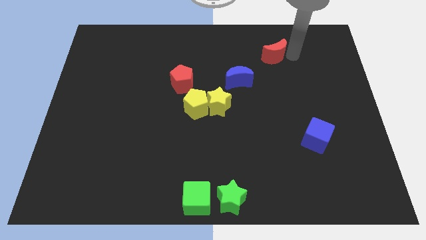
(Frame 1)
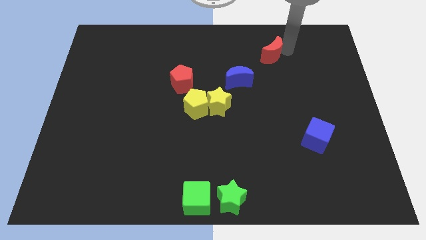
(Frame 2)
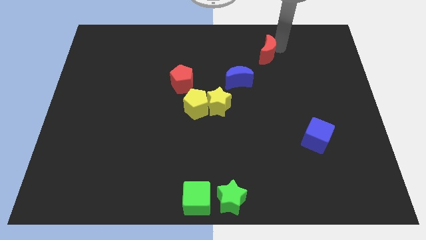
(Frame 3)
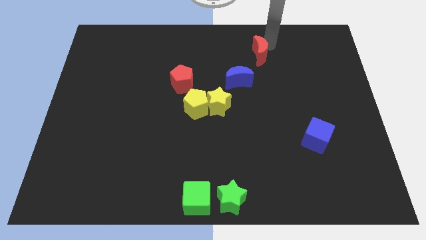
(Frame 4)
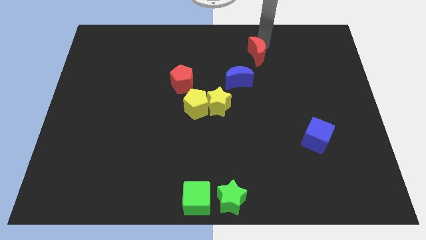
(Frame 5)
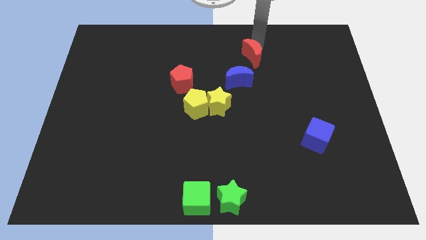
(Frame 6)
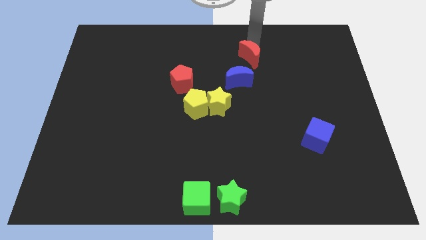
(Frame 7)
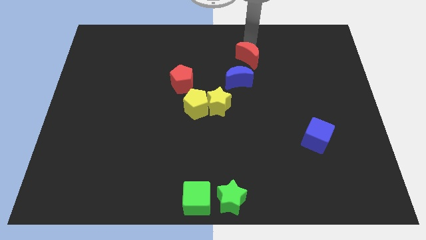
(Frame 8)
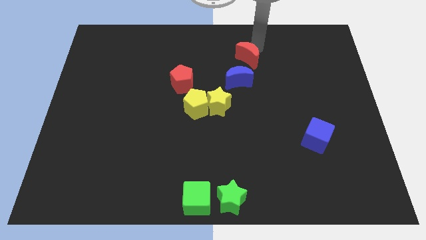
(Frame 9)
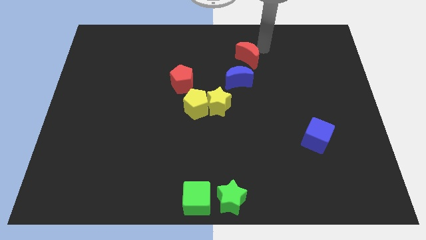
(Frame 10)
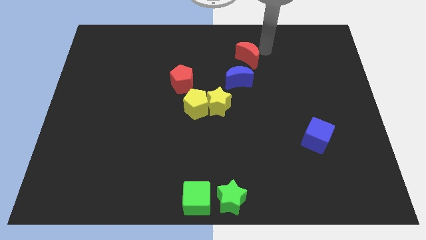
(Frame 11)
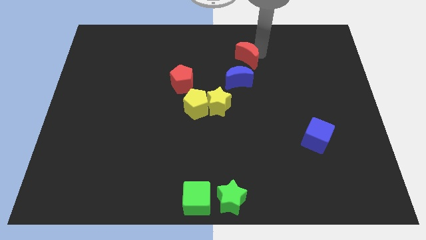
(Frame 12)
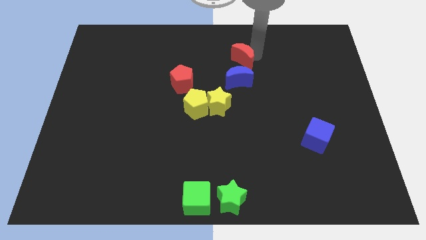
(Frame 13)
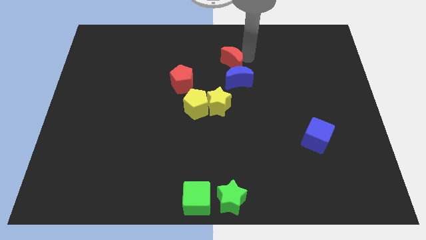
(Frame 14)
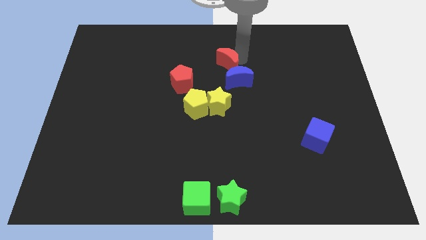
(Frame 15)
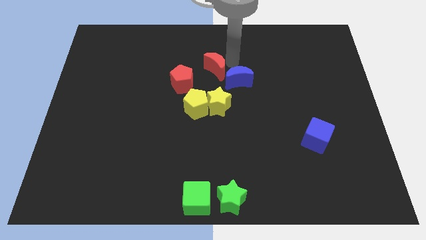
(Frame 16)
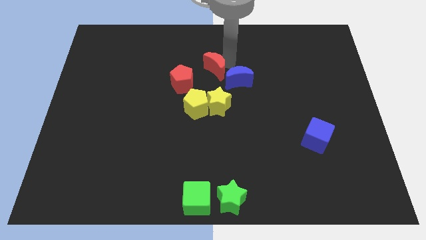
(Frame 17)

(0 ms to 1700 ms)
place the red moon into the group of blocks

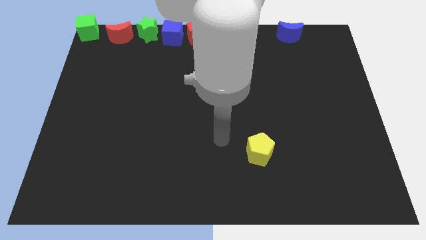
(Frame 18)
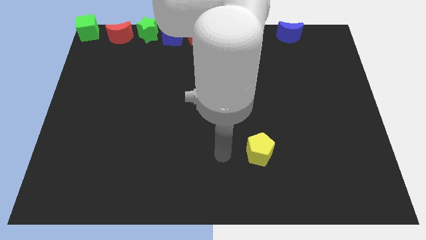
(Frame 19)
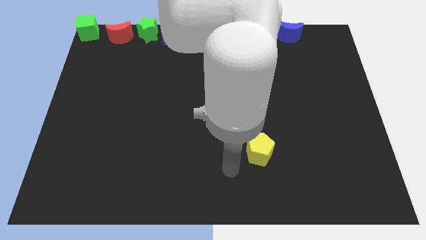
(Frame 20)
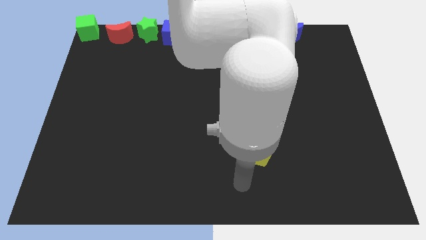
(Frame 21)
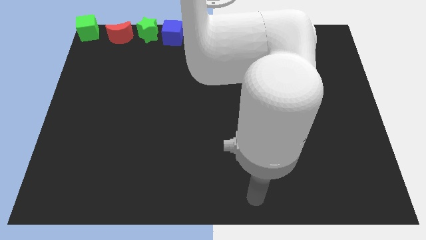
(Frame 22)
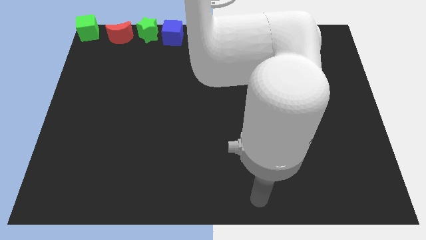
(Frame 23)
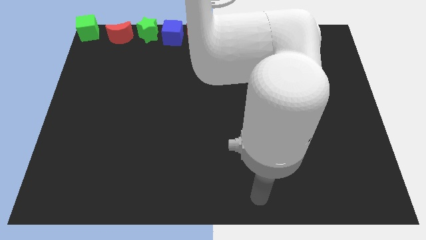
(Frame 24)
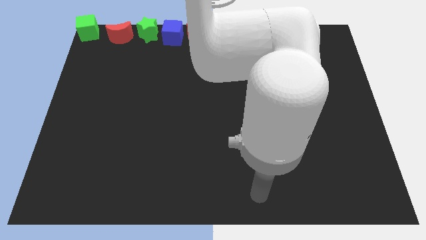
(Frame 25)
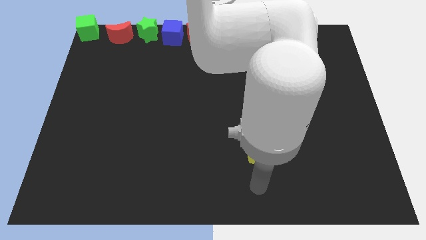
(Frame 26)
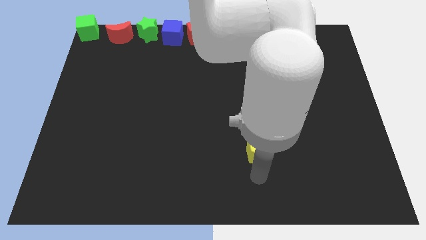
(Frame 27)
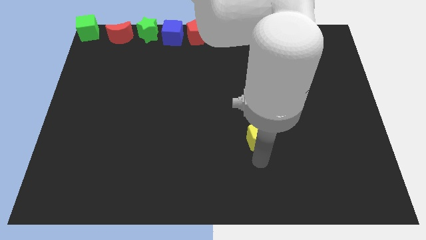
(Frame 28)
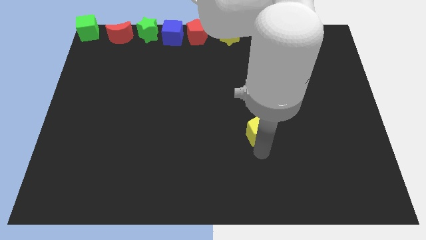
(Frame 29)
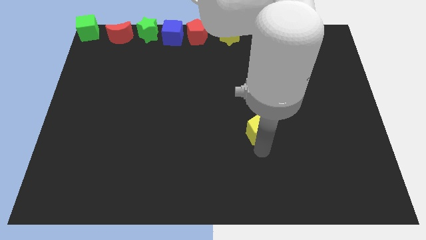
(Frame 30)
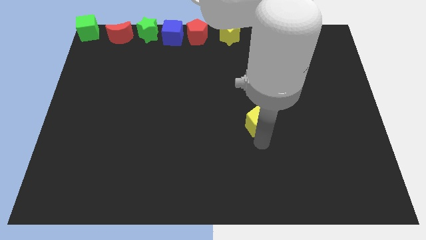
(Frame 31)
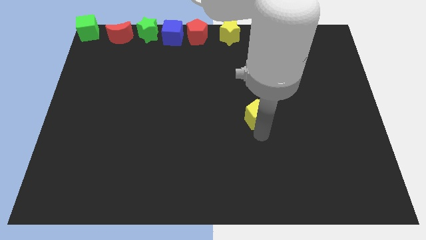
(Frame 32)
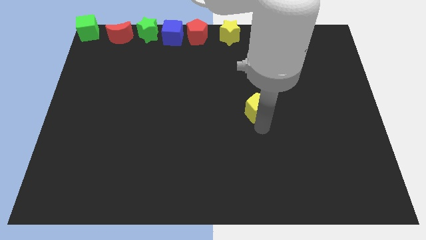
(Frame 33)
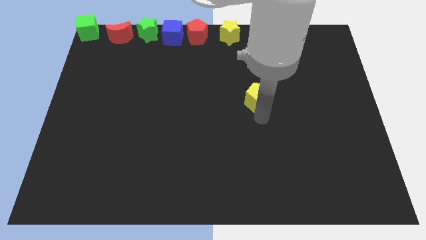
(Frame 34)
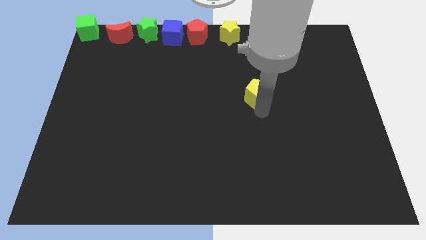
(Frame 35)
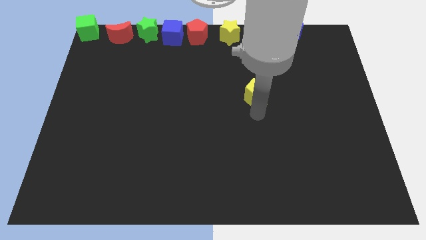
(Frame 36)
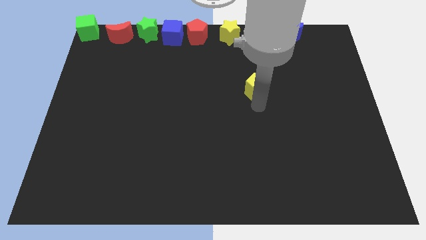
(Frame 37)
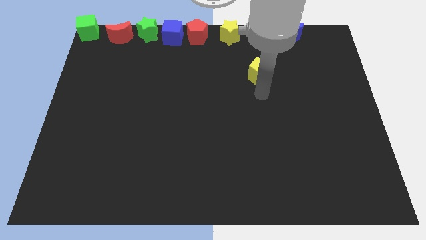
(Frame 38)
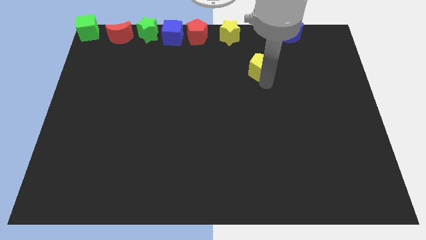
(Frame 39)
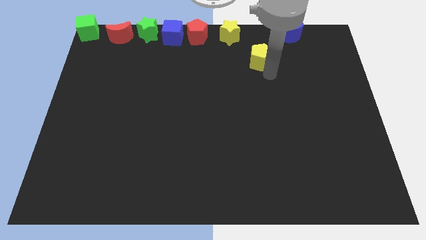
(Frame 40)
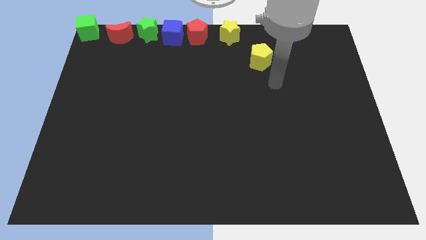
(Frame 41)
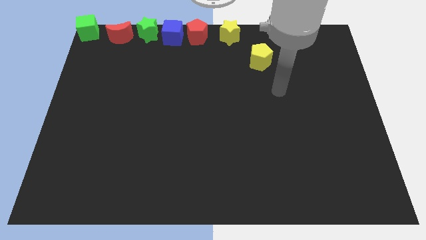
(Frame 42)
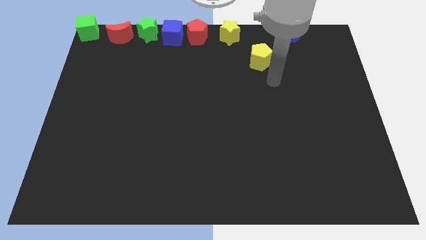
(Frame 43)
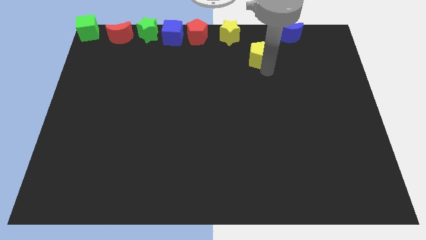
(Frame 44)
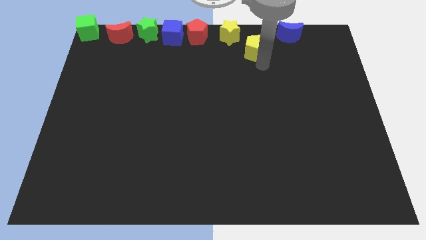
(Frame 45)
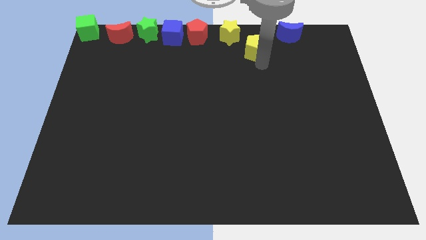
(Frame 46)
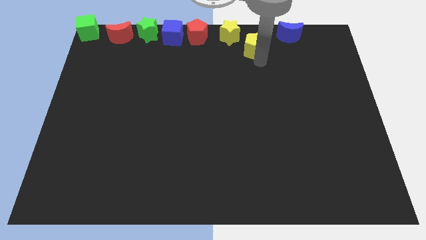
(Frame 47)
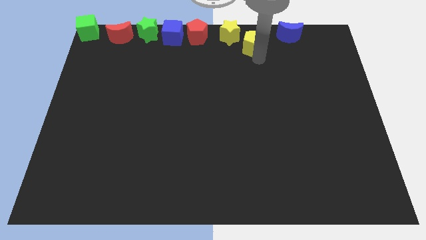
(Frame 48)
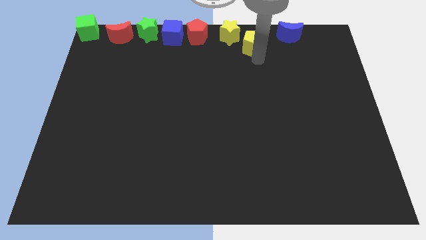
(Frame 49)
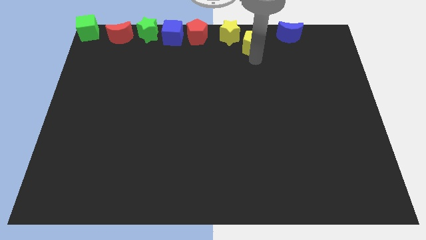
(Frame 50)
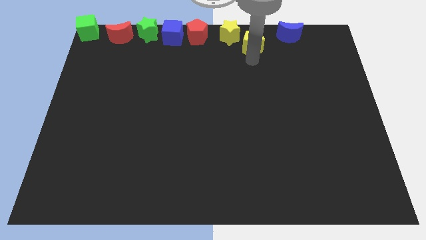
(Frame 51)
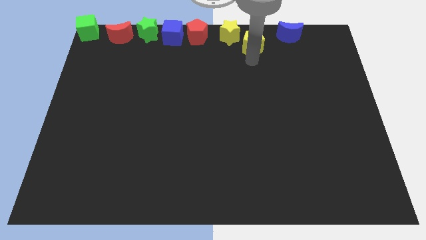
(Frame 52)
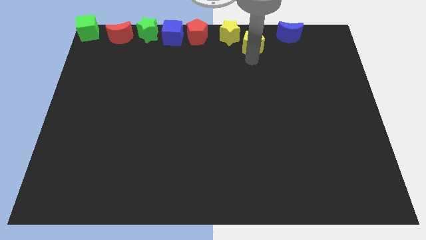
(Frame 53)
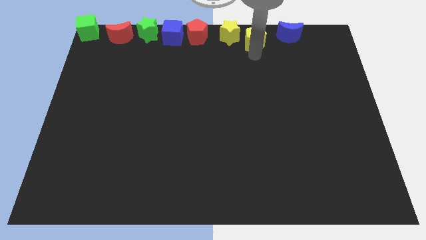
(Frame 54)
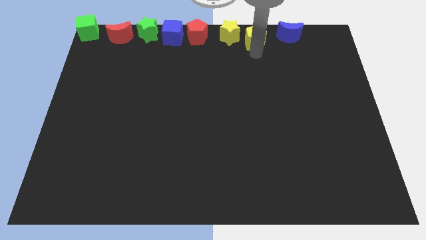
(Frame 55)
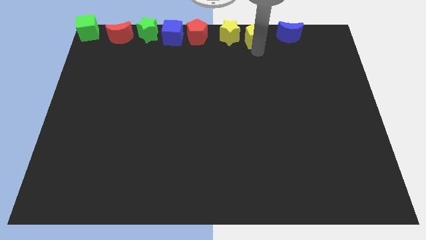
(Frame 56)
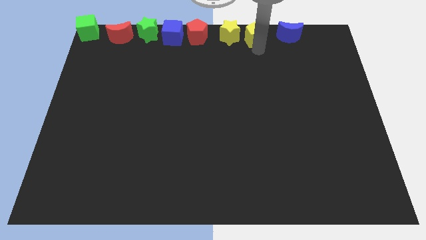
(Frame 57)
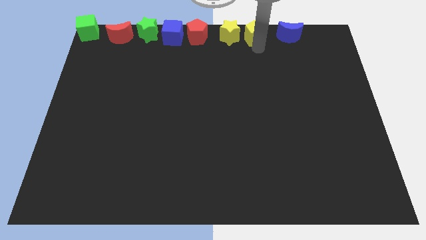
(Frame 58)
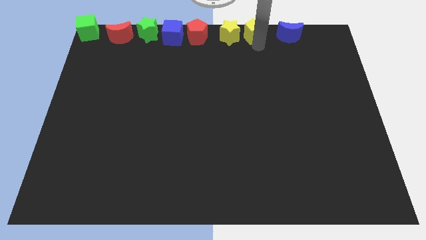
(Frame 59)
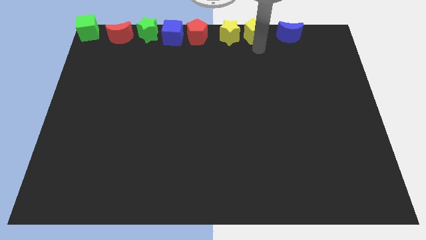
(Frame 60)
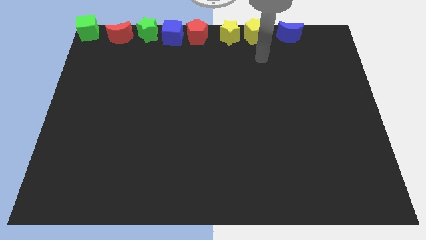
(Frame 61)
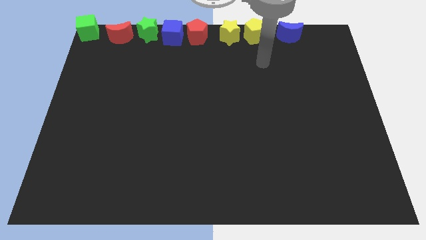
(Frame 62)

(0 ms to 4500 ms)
place the yellow pentagon to the right side of the yellow star

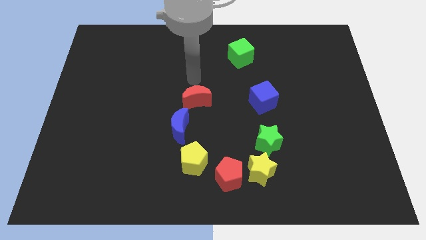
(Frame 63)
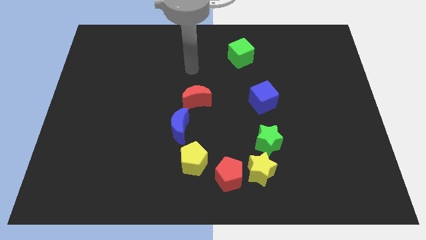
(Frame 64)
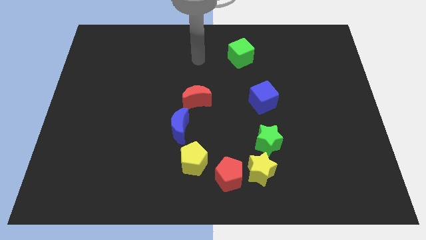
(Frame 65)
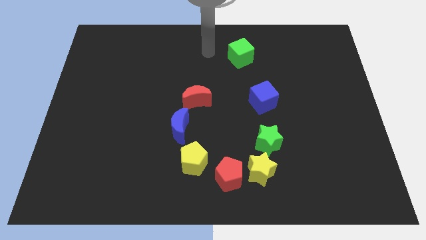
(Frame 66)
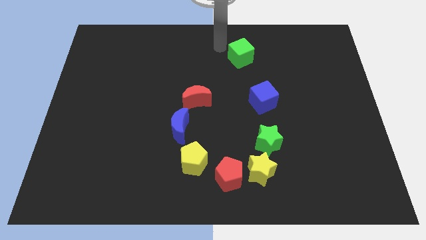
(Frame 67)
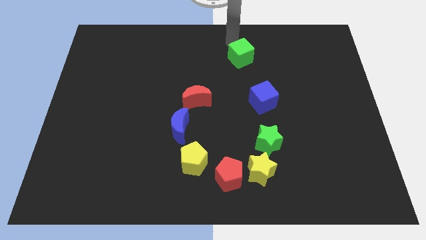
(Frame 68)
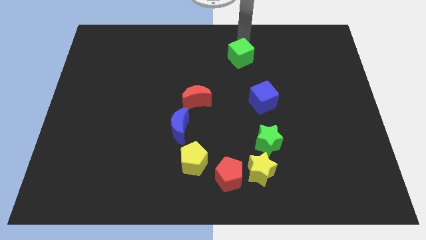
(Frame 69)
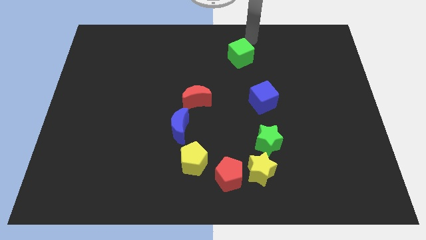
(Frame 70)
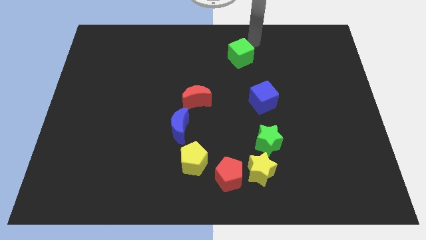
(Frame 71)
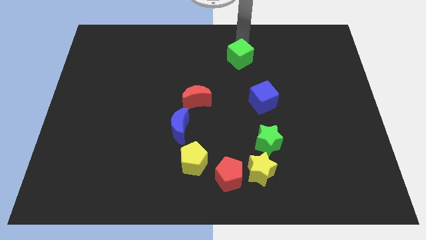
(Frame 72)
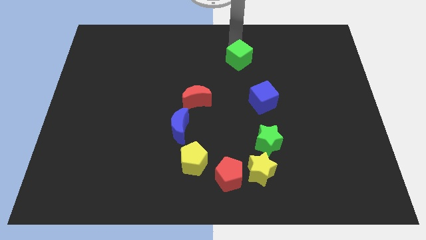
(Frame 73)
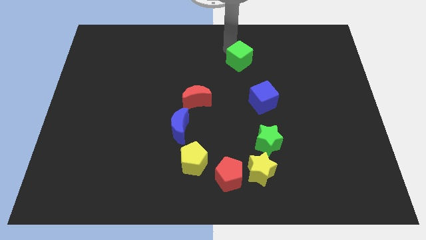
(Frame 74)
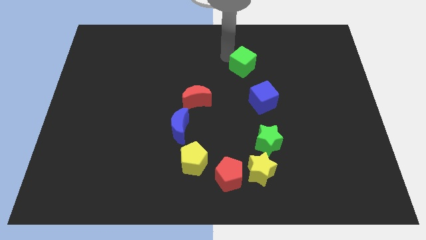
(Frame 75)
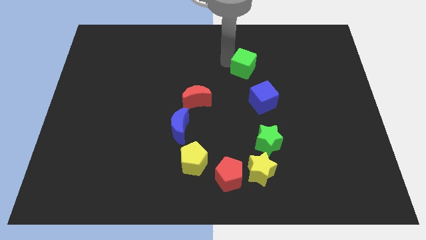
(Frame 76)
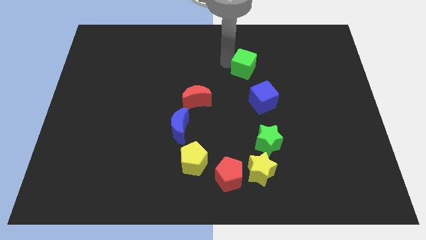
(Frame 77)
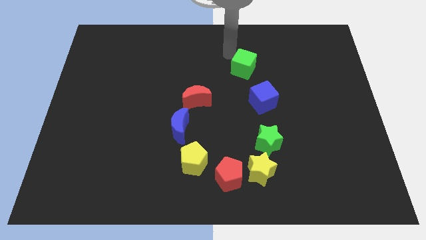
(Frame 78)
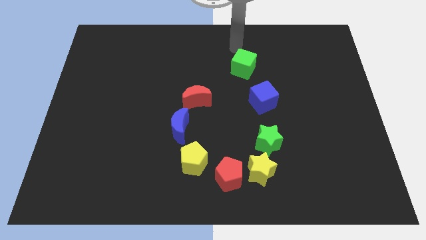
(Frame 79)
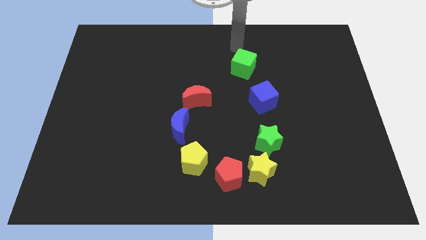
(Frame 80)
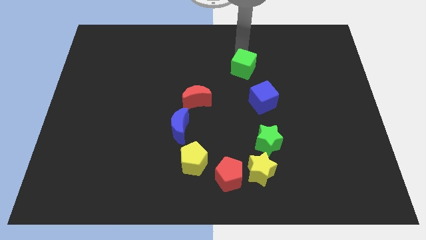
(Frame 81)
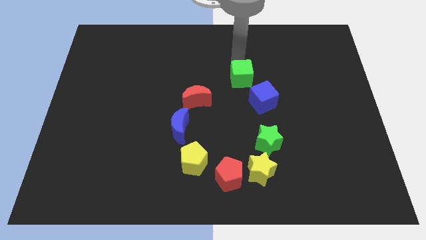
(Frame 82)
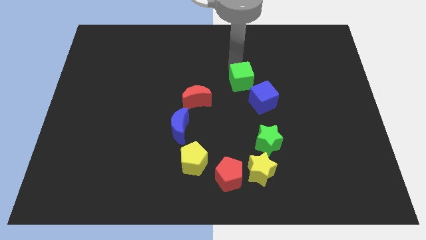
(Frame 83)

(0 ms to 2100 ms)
move the green cube to the top right to red crescent

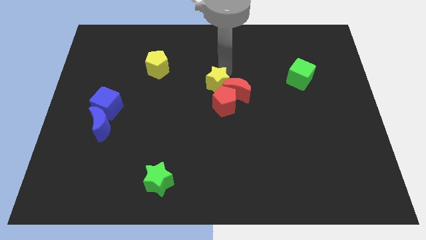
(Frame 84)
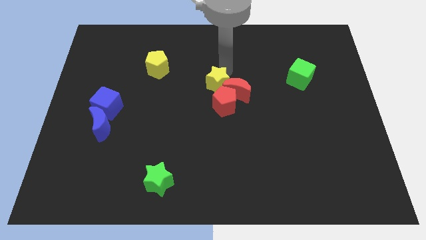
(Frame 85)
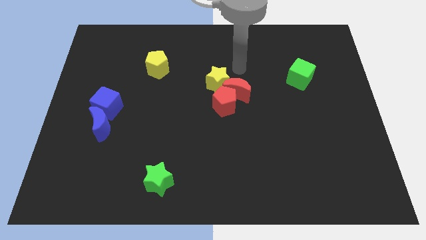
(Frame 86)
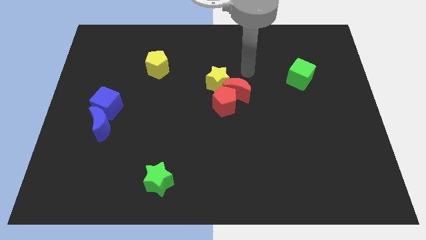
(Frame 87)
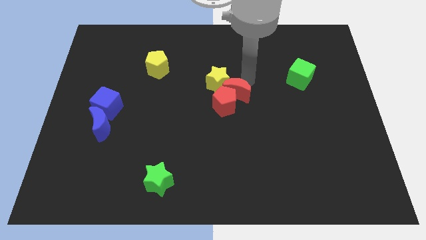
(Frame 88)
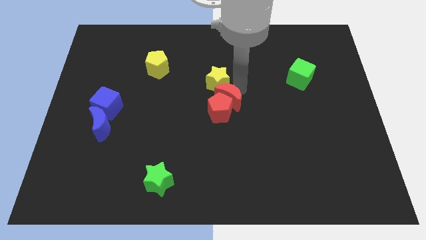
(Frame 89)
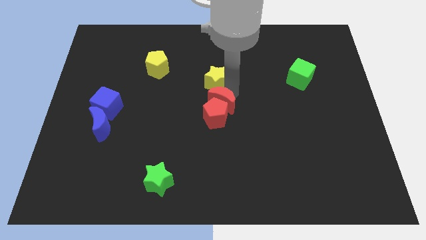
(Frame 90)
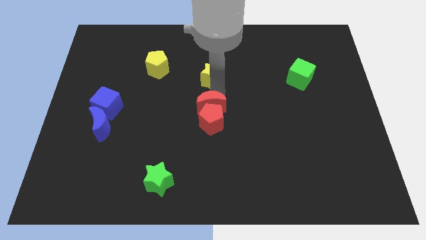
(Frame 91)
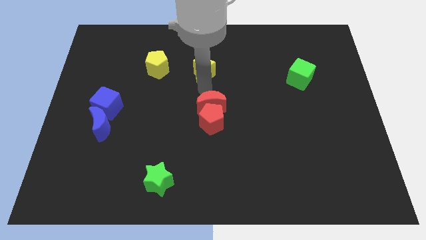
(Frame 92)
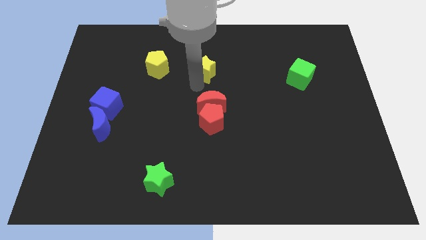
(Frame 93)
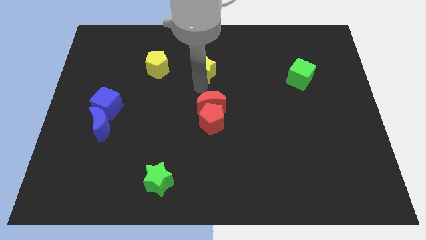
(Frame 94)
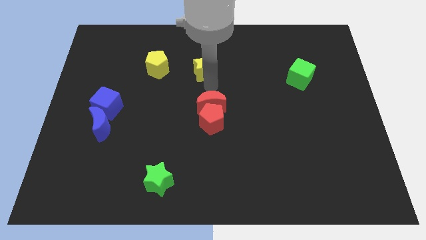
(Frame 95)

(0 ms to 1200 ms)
separate yellow star and red blocks from each other
